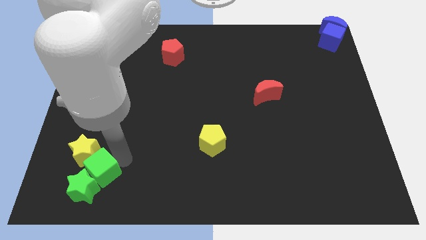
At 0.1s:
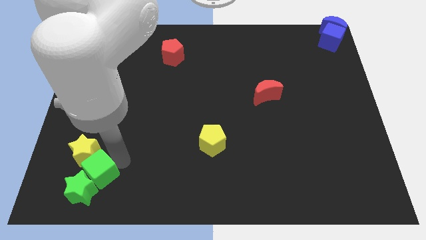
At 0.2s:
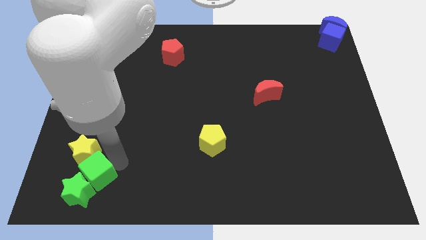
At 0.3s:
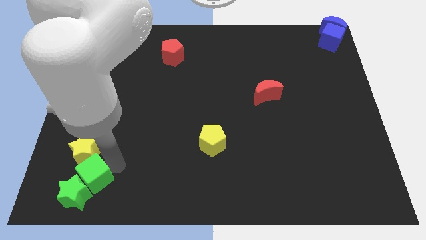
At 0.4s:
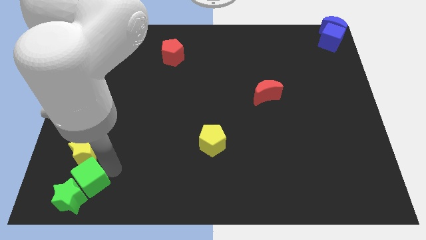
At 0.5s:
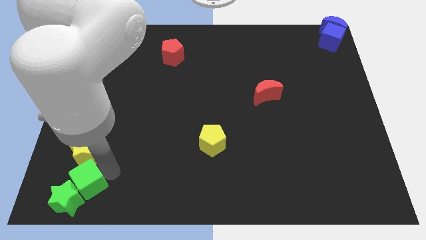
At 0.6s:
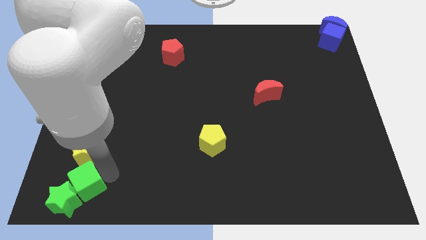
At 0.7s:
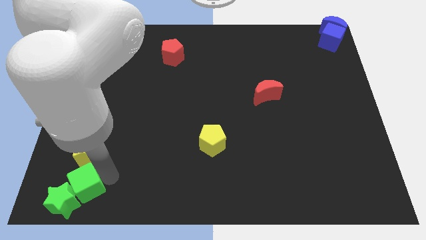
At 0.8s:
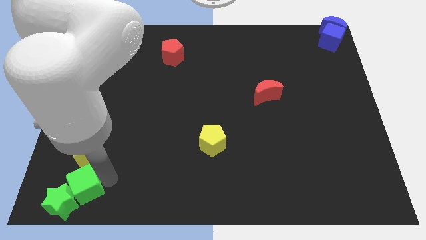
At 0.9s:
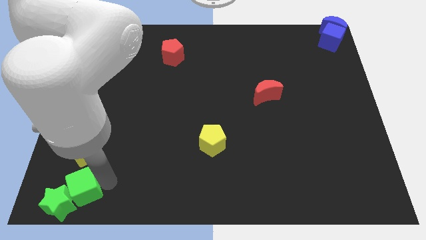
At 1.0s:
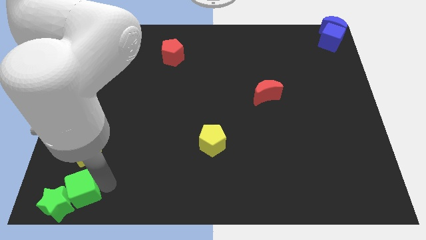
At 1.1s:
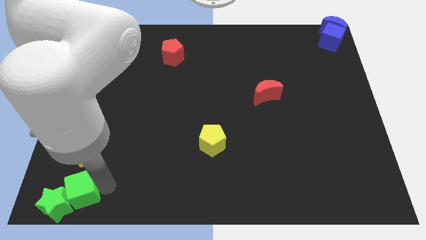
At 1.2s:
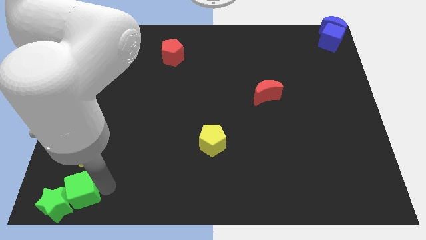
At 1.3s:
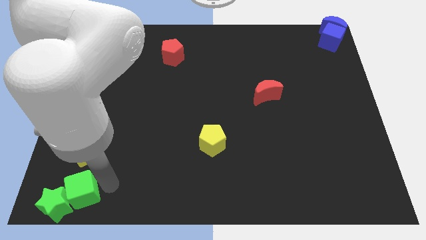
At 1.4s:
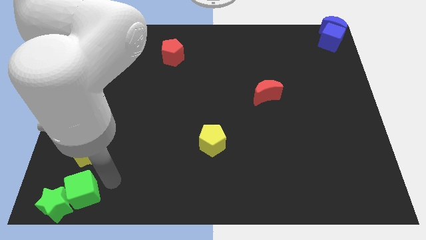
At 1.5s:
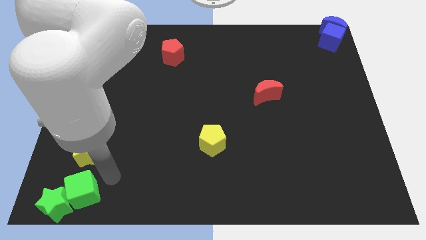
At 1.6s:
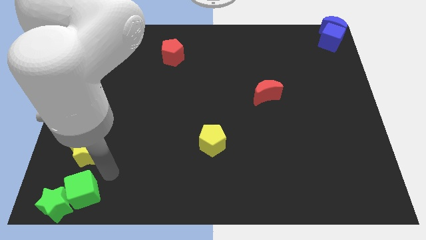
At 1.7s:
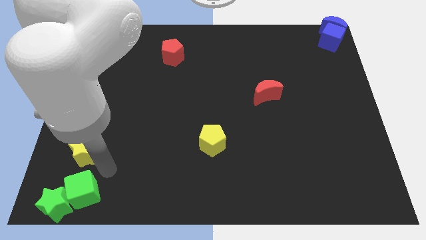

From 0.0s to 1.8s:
move the green cube along with green star below the yellow star

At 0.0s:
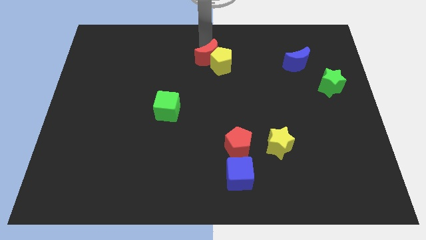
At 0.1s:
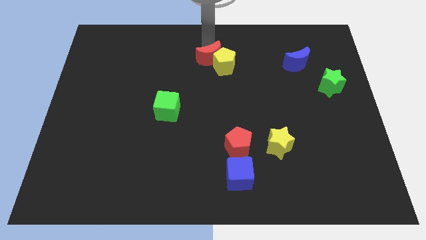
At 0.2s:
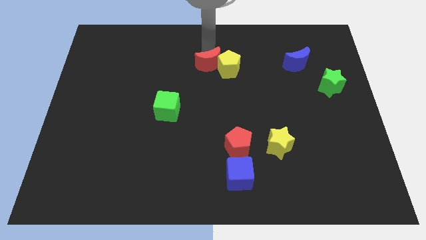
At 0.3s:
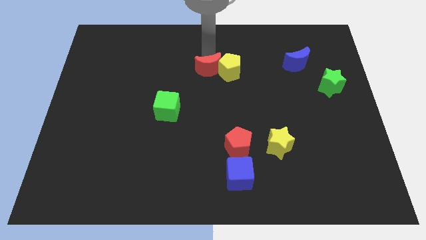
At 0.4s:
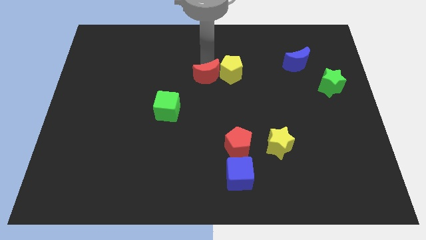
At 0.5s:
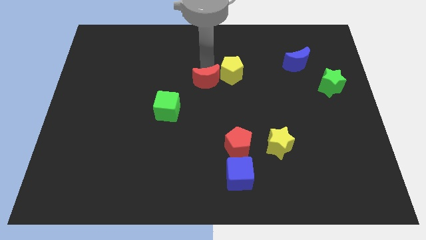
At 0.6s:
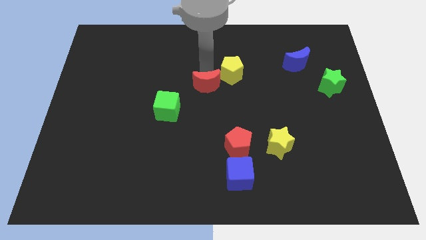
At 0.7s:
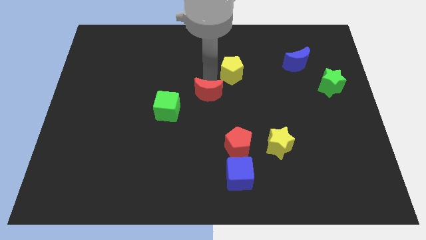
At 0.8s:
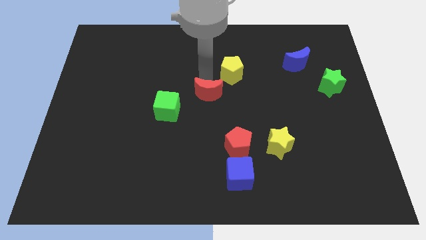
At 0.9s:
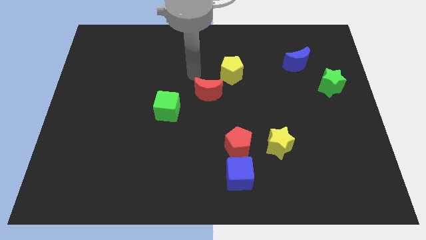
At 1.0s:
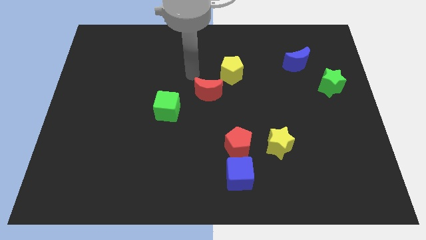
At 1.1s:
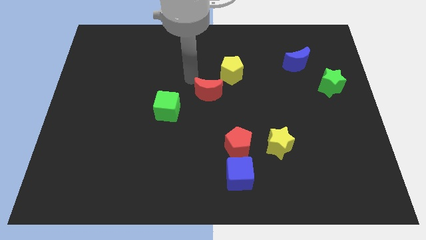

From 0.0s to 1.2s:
slide the red crescent to the bottom left side of the yellow pentagon

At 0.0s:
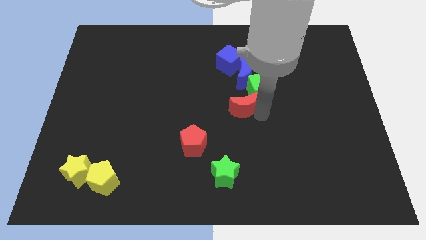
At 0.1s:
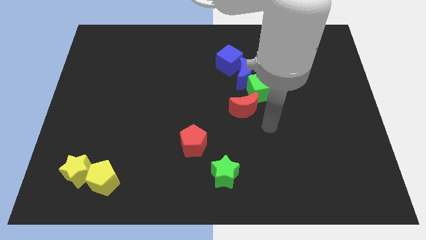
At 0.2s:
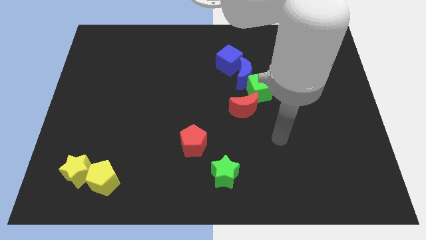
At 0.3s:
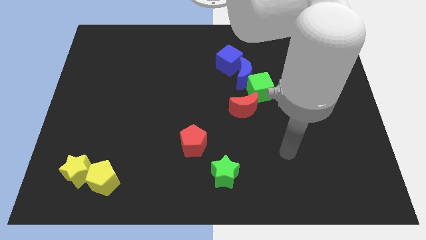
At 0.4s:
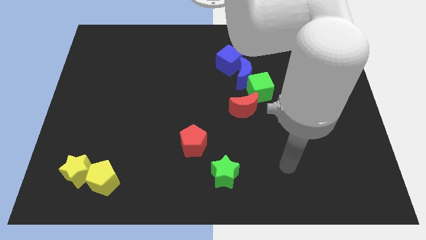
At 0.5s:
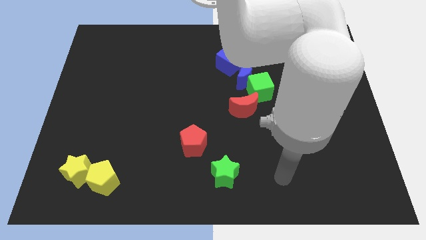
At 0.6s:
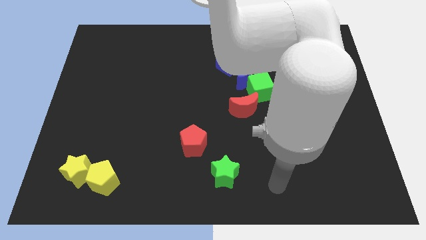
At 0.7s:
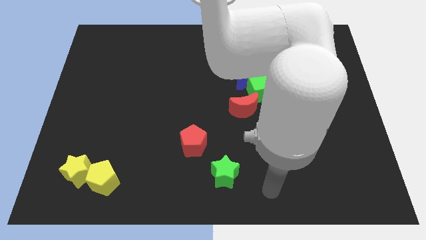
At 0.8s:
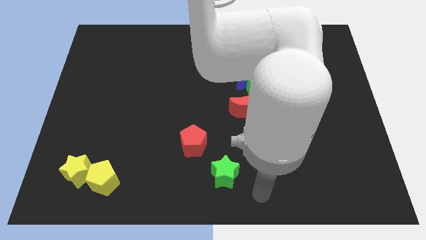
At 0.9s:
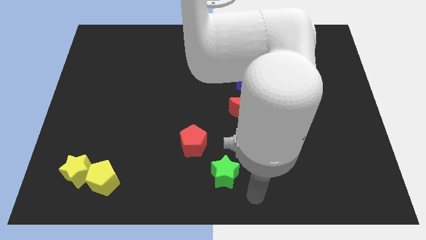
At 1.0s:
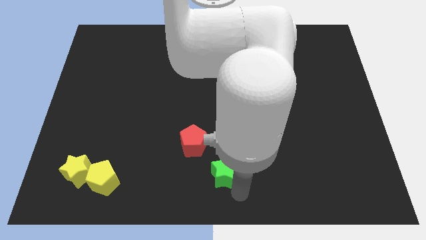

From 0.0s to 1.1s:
move your arm to the bottom of the green star

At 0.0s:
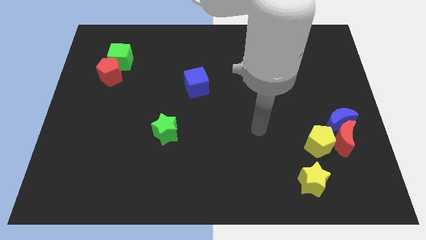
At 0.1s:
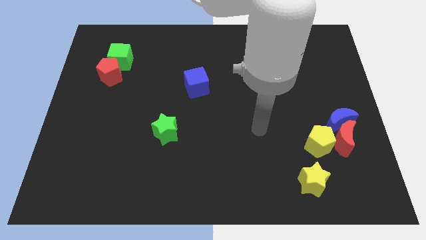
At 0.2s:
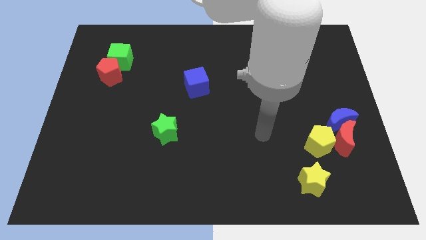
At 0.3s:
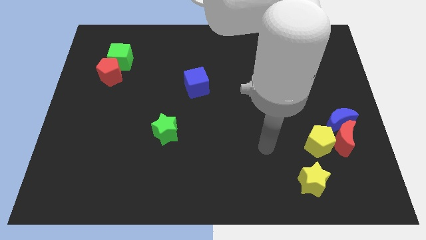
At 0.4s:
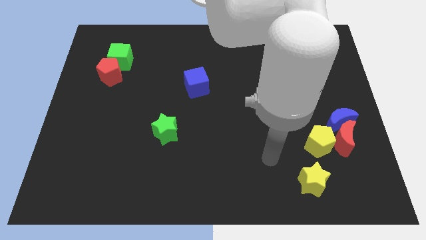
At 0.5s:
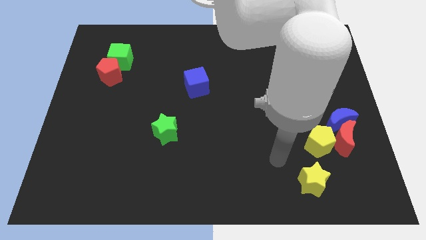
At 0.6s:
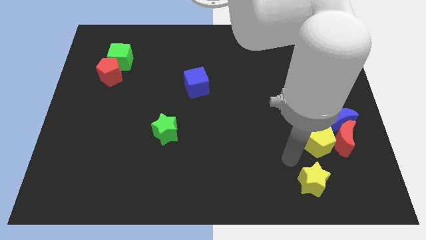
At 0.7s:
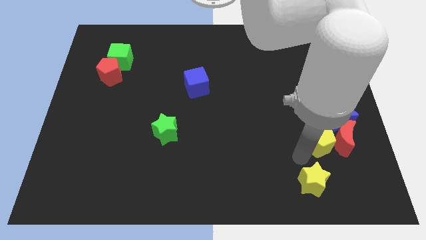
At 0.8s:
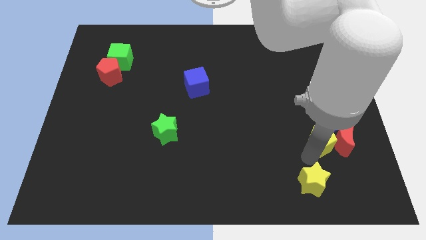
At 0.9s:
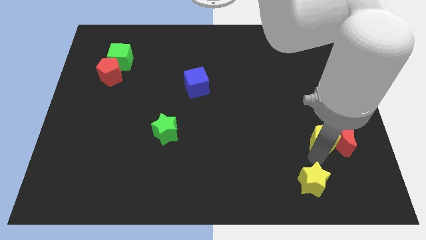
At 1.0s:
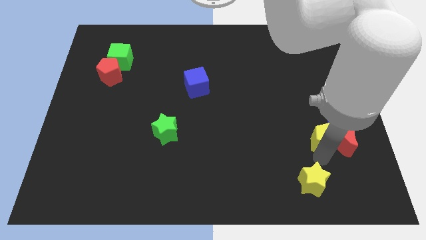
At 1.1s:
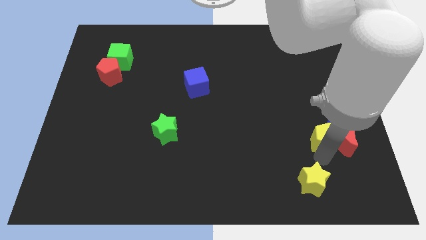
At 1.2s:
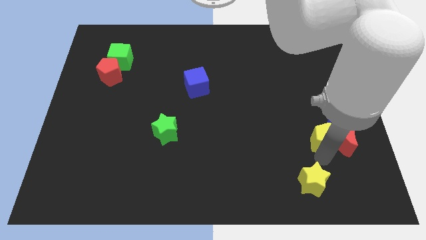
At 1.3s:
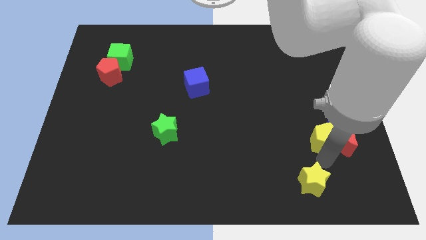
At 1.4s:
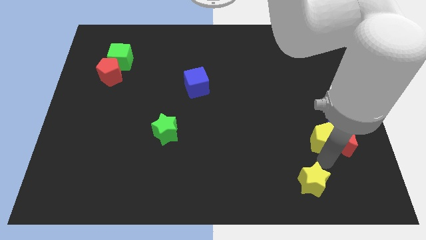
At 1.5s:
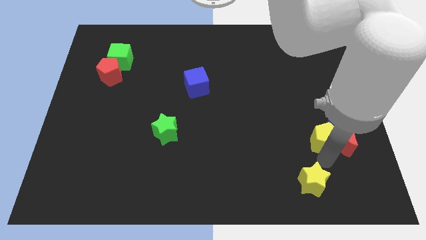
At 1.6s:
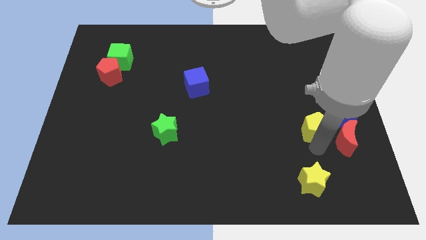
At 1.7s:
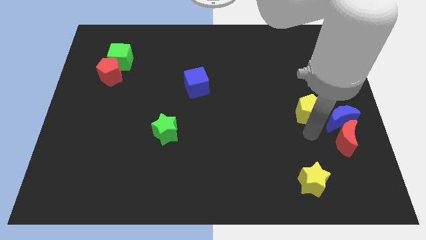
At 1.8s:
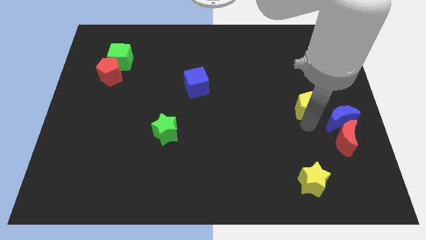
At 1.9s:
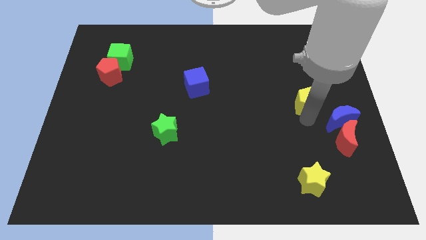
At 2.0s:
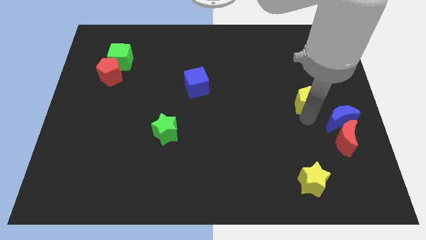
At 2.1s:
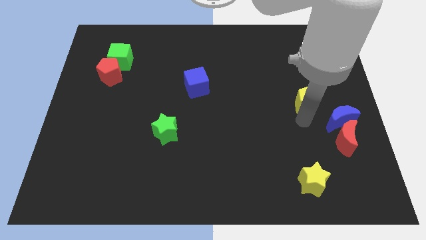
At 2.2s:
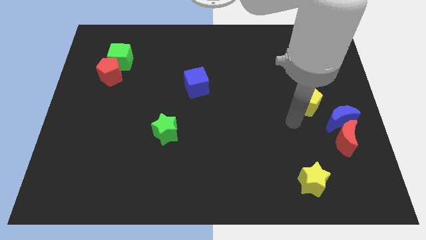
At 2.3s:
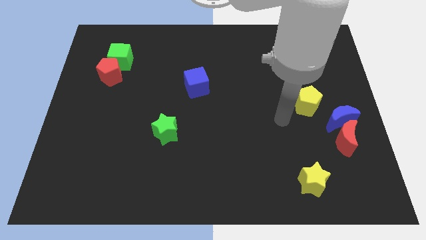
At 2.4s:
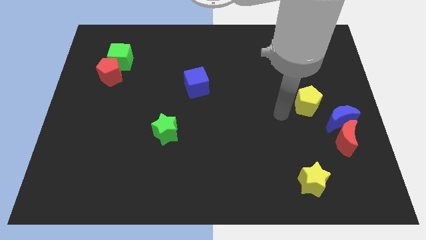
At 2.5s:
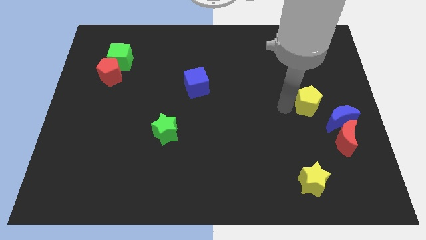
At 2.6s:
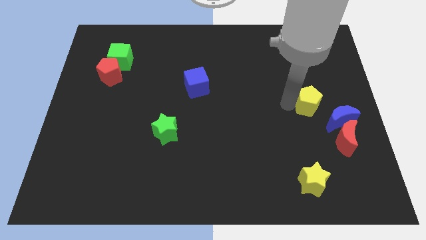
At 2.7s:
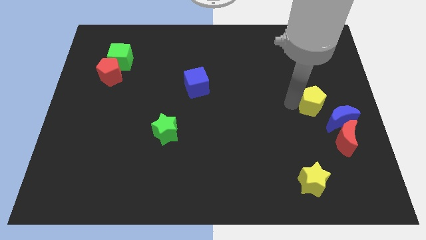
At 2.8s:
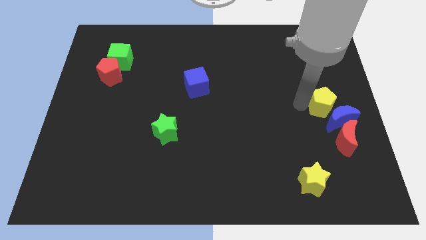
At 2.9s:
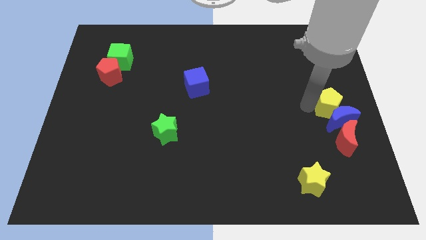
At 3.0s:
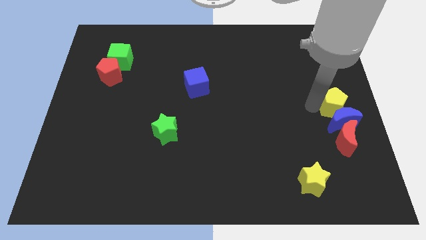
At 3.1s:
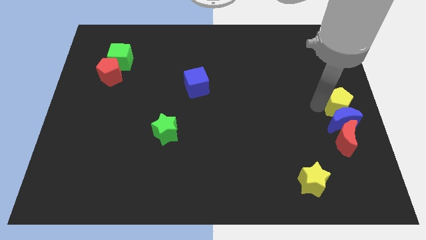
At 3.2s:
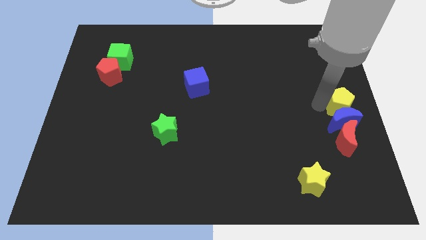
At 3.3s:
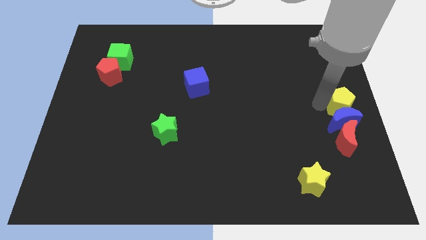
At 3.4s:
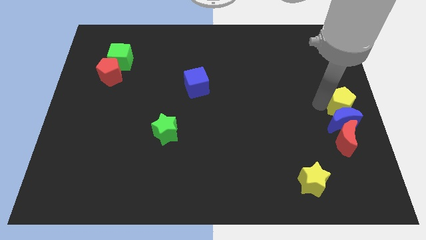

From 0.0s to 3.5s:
place the yellow pentagon above the blue crescent

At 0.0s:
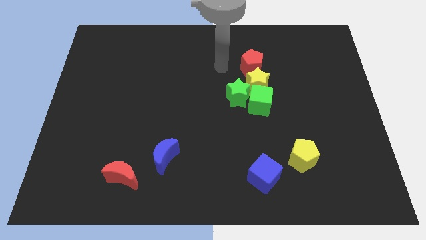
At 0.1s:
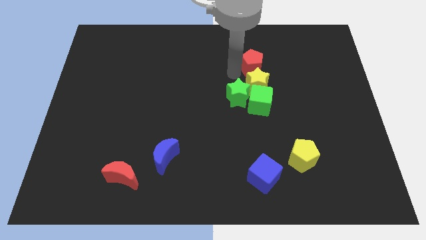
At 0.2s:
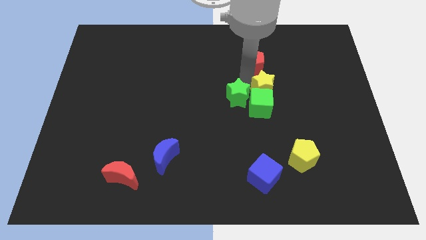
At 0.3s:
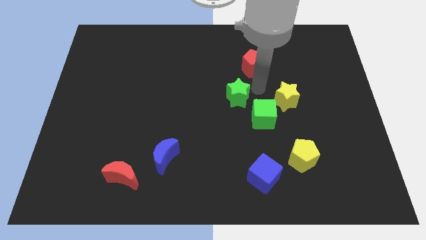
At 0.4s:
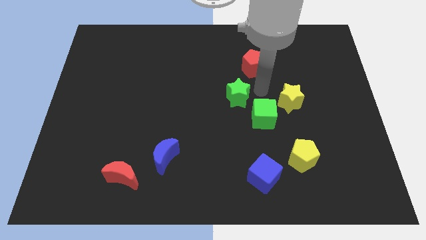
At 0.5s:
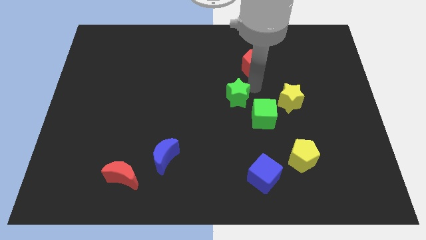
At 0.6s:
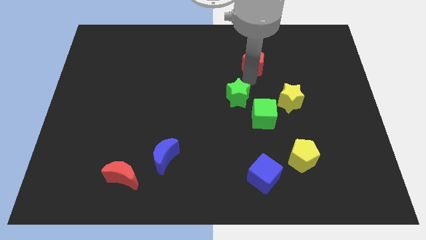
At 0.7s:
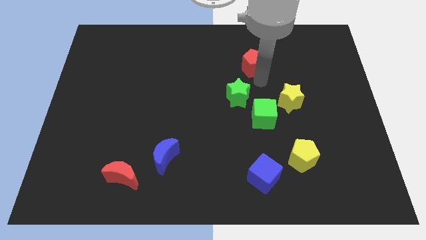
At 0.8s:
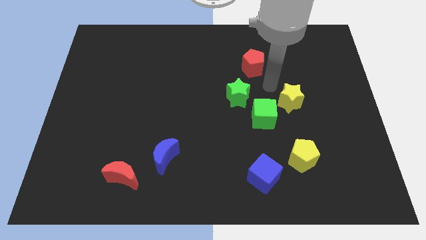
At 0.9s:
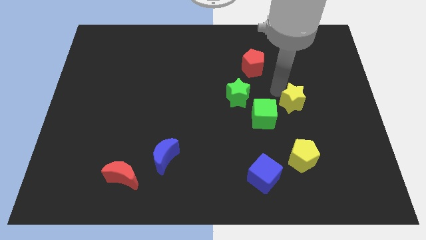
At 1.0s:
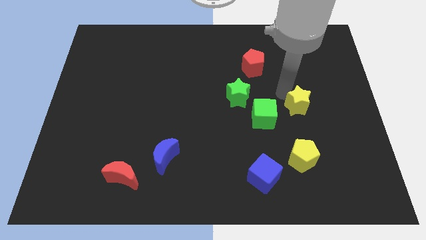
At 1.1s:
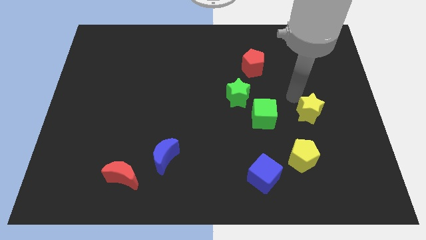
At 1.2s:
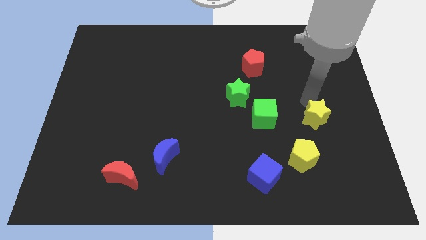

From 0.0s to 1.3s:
separate the green blocks and the yellow star

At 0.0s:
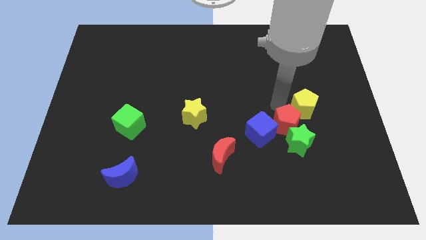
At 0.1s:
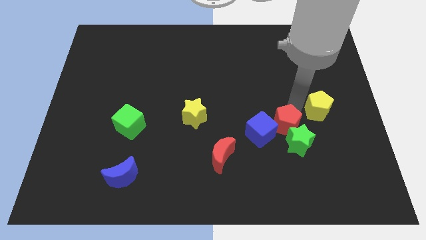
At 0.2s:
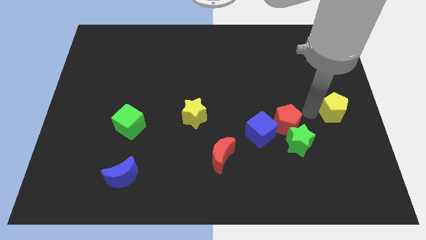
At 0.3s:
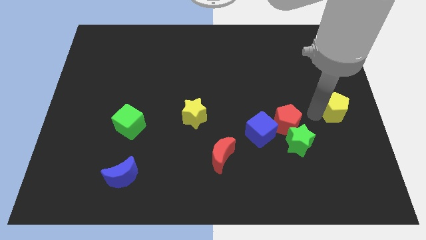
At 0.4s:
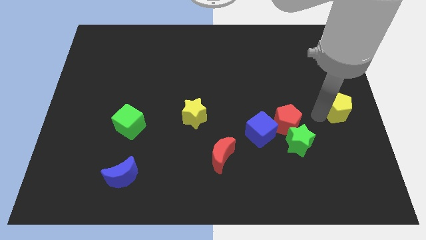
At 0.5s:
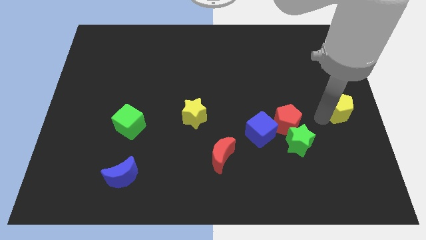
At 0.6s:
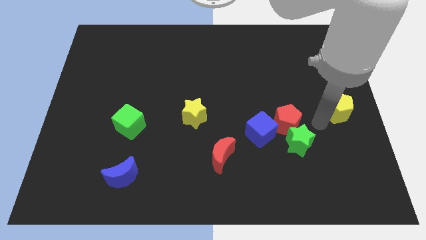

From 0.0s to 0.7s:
push yellow pentagon slightly towards right
